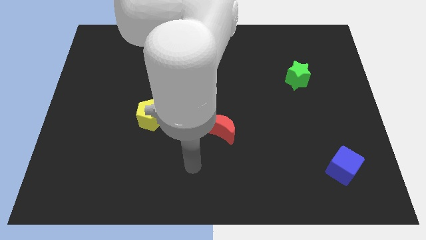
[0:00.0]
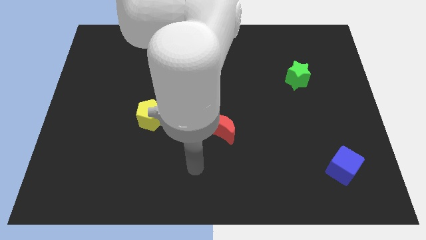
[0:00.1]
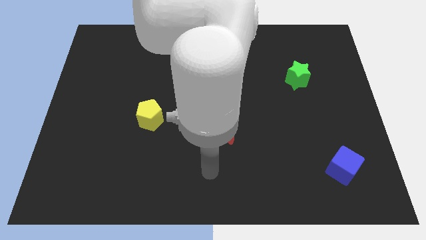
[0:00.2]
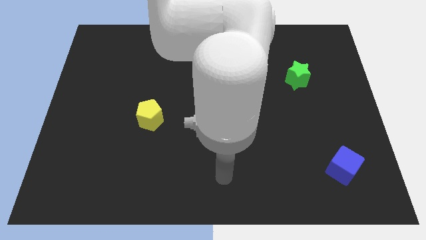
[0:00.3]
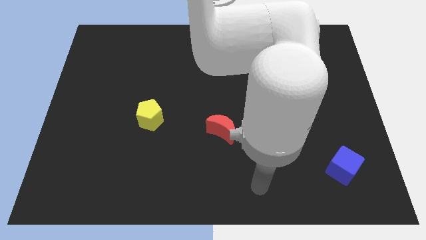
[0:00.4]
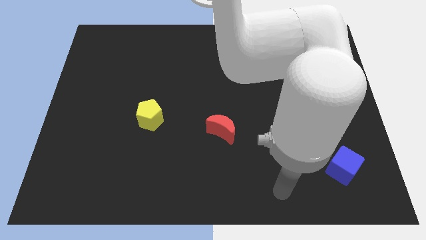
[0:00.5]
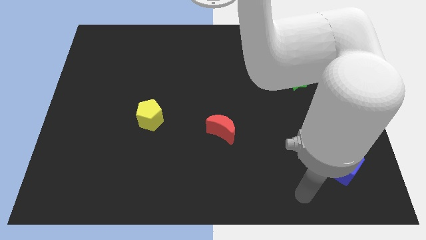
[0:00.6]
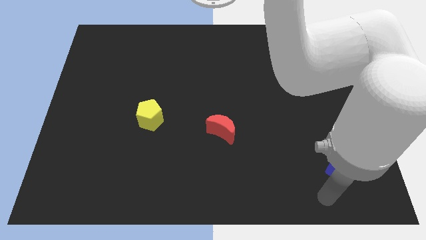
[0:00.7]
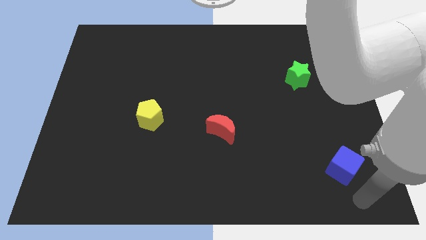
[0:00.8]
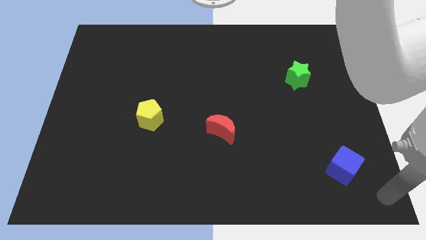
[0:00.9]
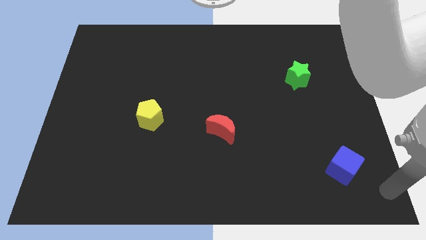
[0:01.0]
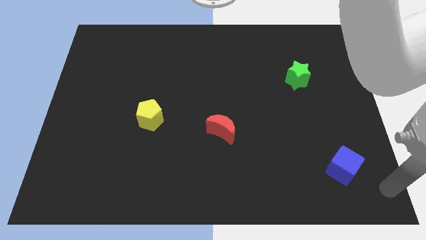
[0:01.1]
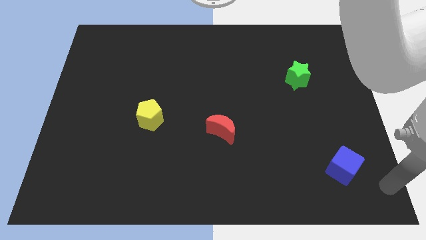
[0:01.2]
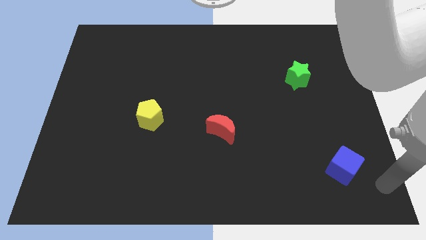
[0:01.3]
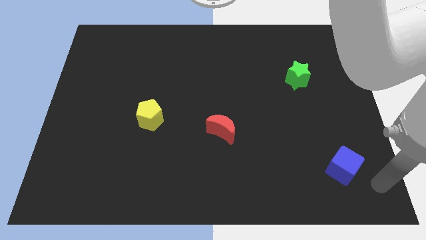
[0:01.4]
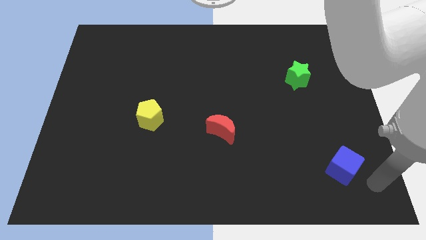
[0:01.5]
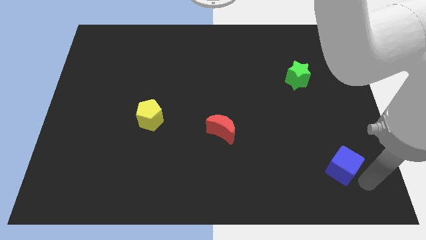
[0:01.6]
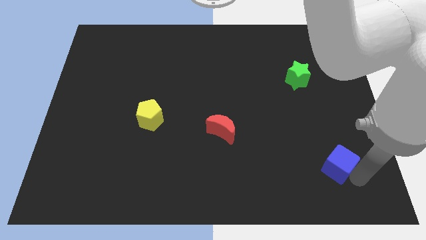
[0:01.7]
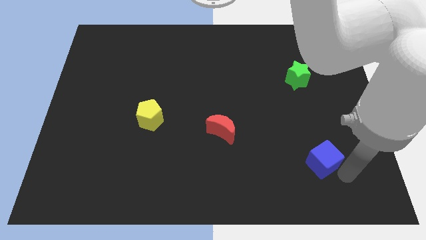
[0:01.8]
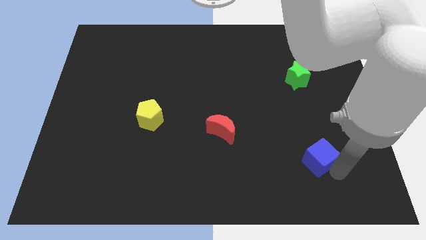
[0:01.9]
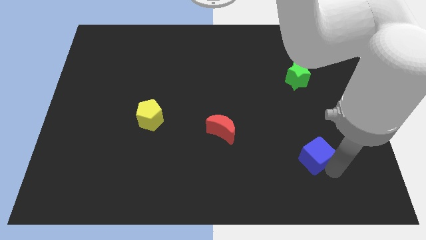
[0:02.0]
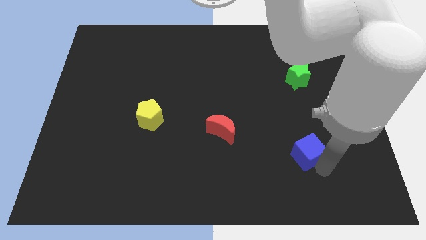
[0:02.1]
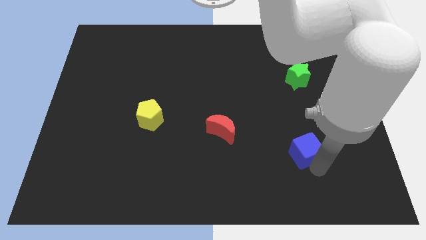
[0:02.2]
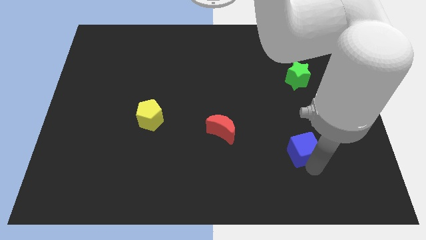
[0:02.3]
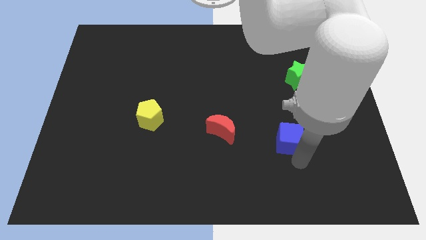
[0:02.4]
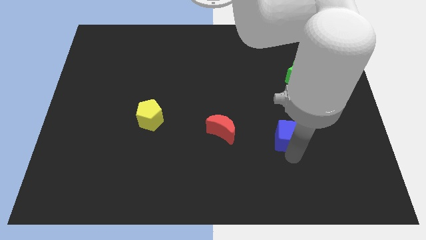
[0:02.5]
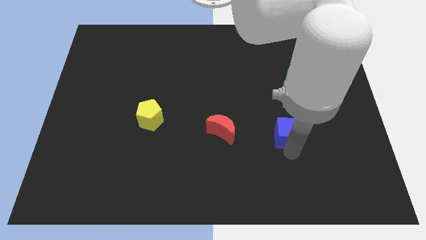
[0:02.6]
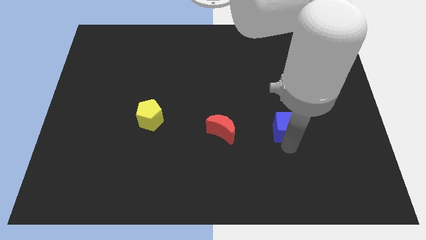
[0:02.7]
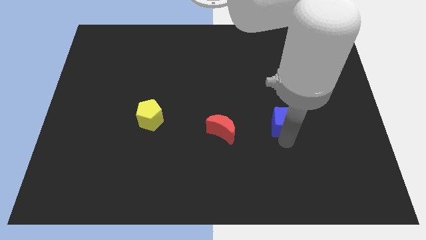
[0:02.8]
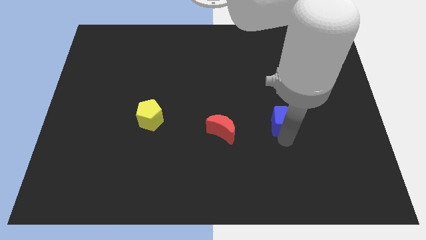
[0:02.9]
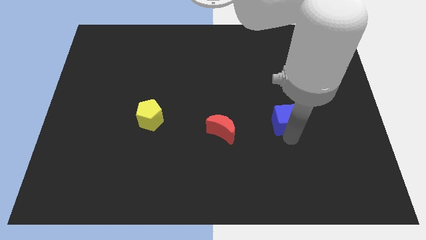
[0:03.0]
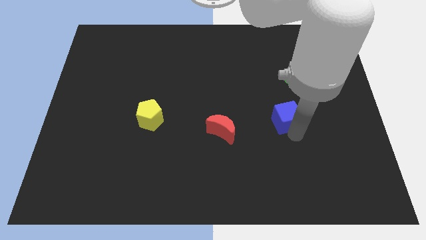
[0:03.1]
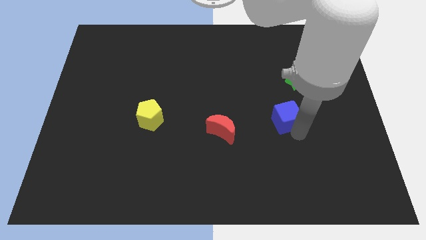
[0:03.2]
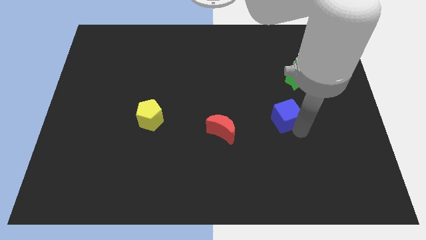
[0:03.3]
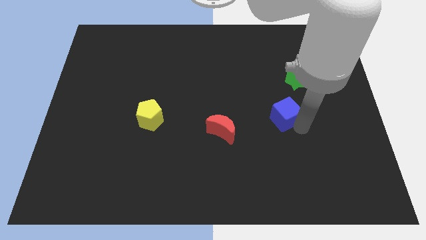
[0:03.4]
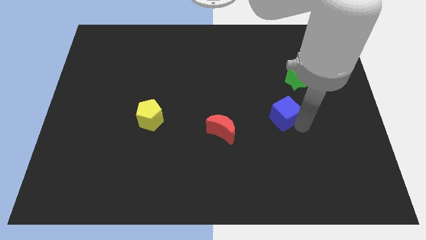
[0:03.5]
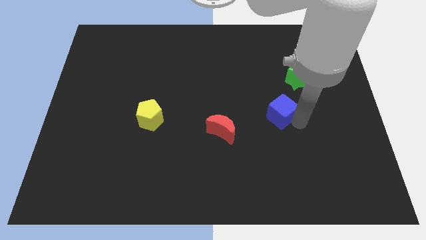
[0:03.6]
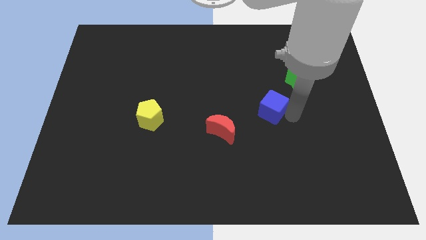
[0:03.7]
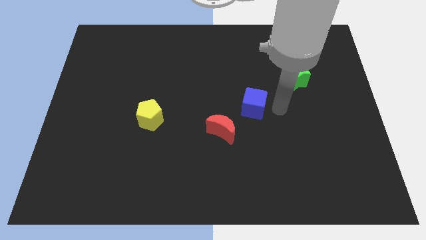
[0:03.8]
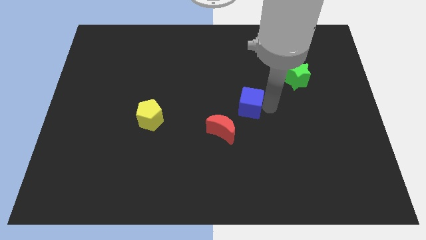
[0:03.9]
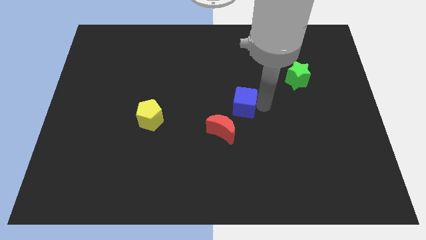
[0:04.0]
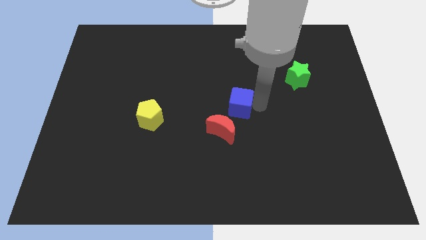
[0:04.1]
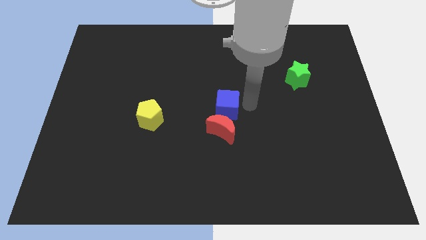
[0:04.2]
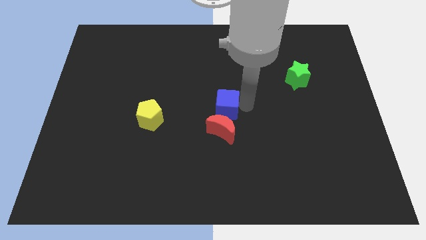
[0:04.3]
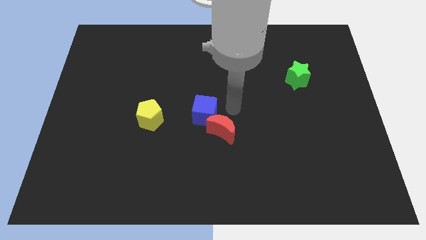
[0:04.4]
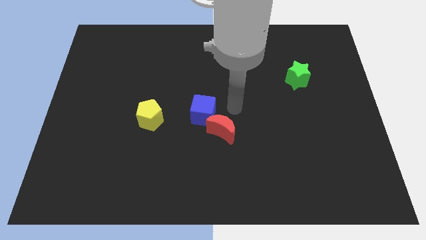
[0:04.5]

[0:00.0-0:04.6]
push the blue block towards the red moon

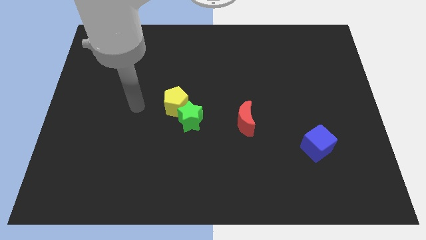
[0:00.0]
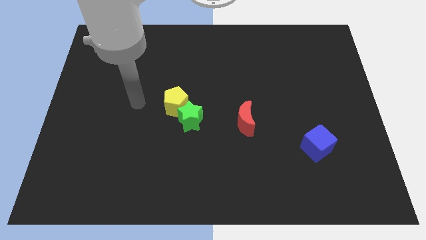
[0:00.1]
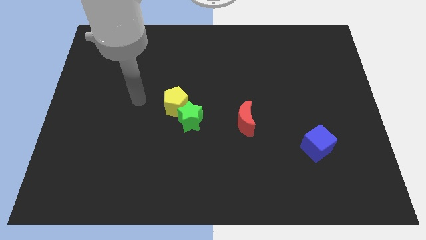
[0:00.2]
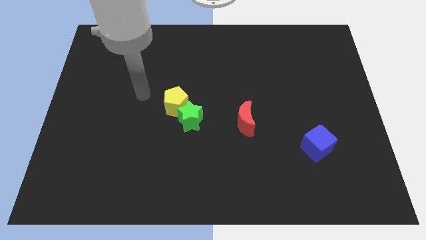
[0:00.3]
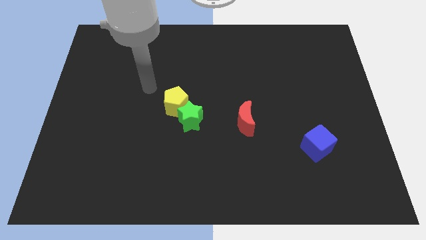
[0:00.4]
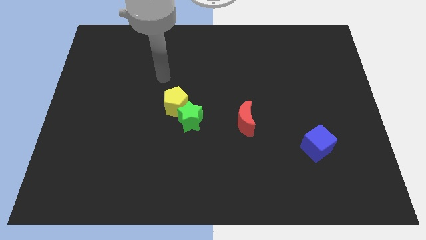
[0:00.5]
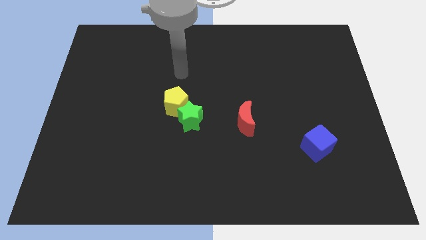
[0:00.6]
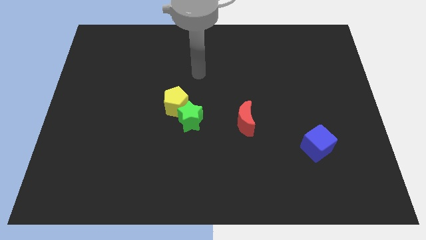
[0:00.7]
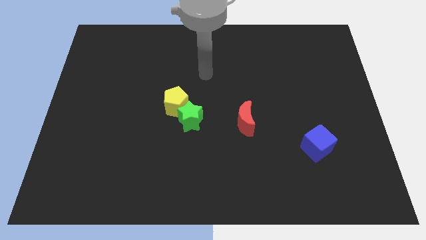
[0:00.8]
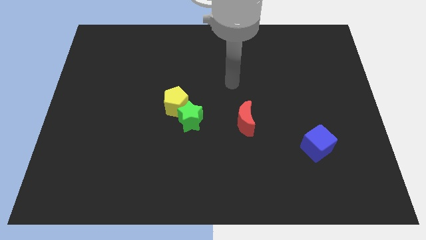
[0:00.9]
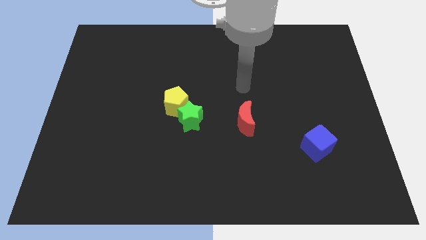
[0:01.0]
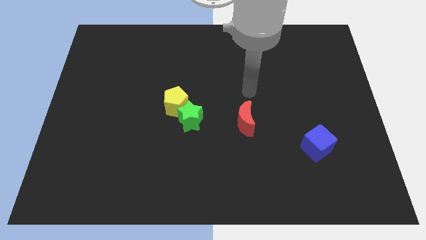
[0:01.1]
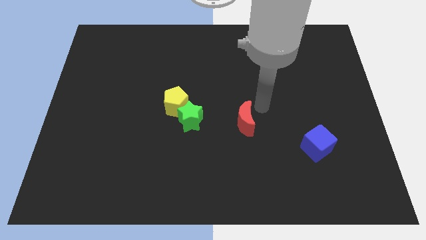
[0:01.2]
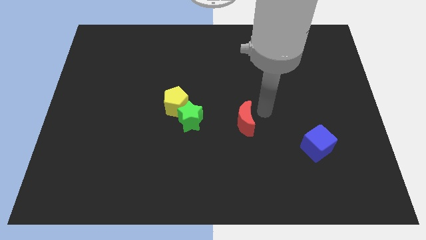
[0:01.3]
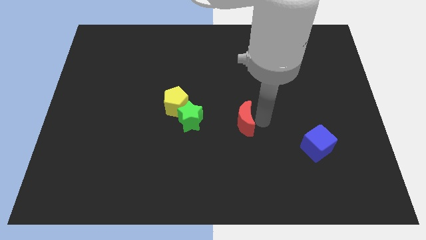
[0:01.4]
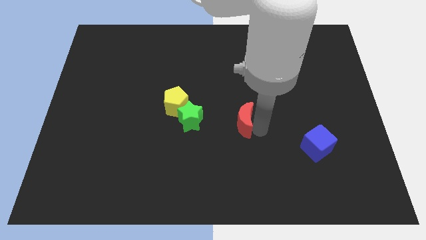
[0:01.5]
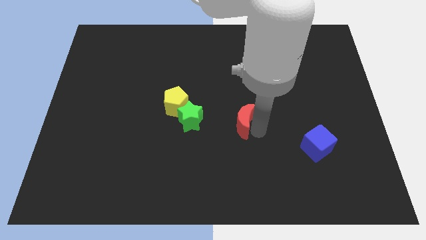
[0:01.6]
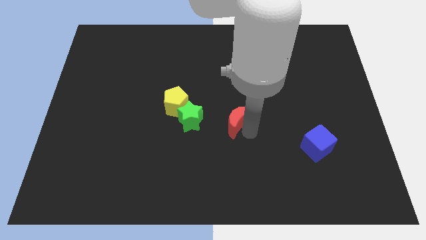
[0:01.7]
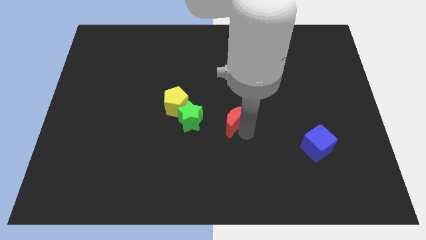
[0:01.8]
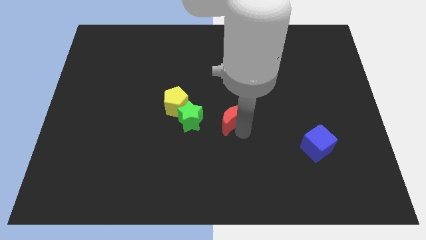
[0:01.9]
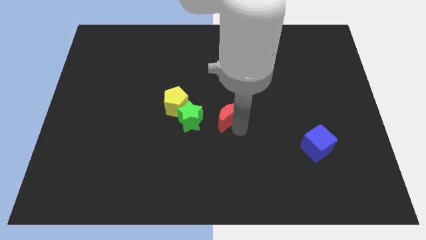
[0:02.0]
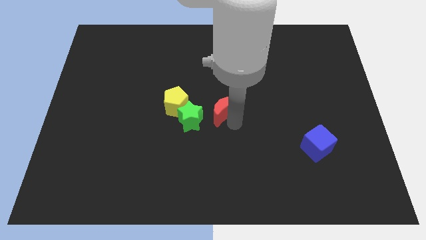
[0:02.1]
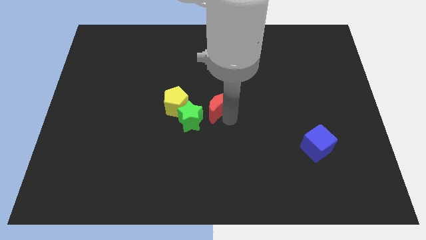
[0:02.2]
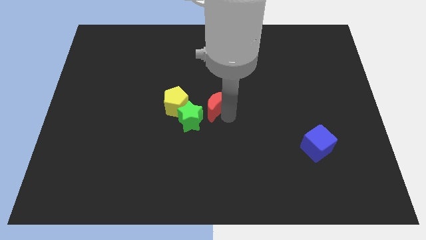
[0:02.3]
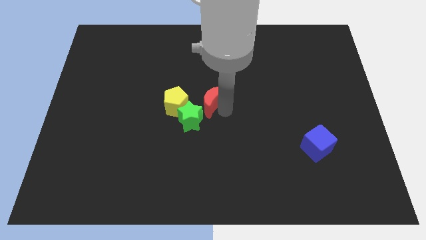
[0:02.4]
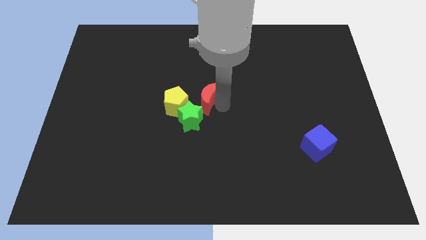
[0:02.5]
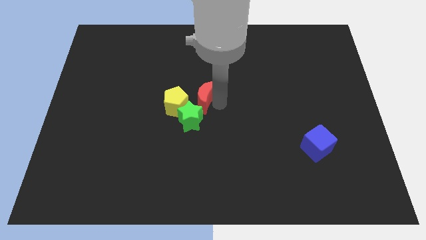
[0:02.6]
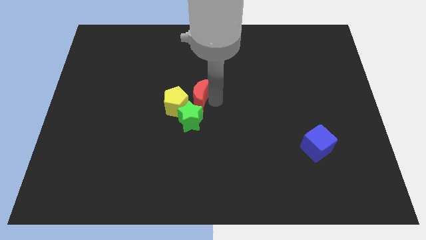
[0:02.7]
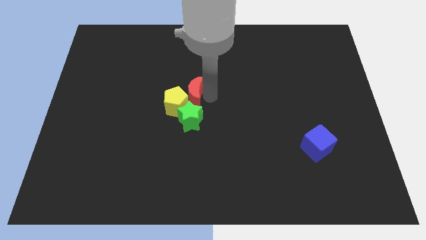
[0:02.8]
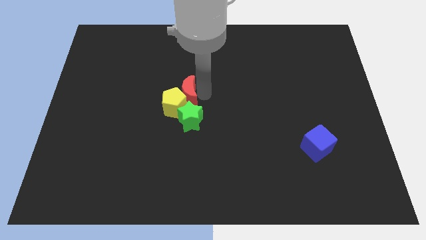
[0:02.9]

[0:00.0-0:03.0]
slide the red moon to the pentagon

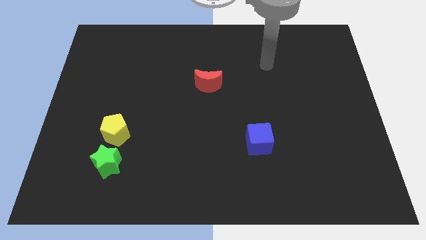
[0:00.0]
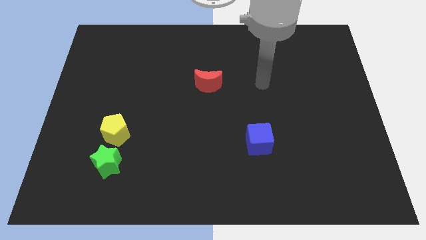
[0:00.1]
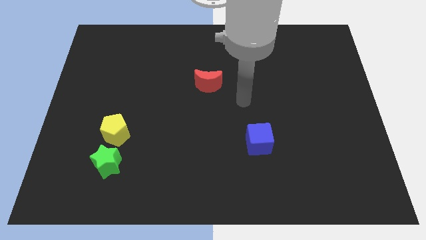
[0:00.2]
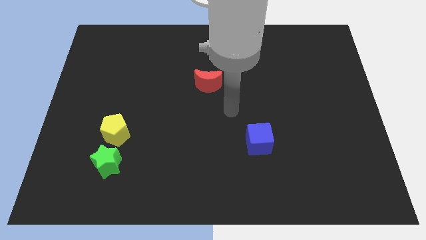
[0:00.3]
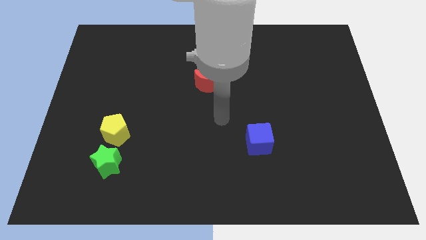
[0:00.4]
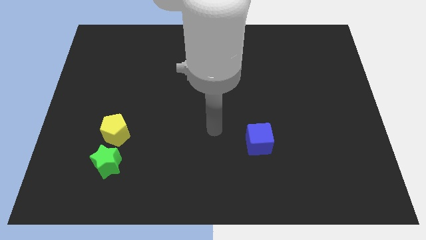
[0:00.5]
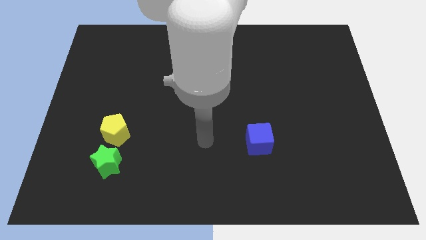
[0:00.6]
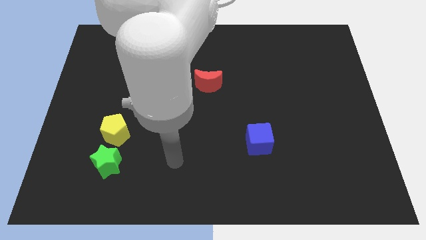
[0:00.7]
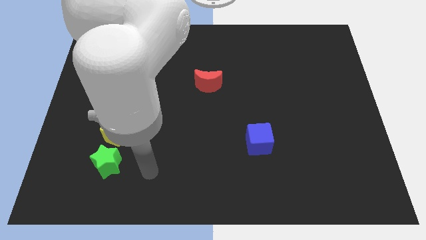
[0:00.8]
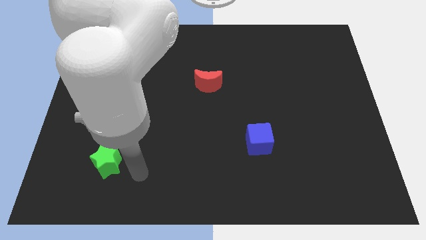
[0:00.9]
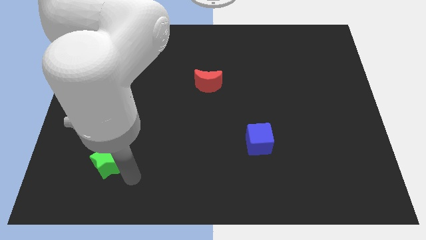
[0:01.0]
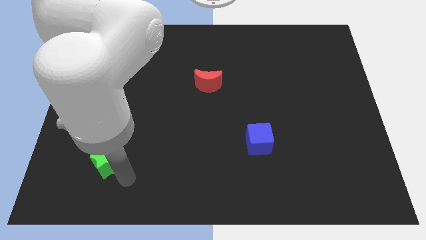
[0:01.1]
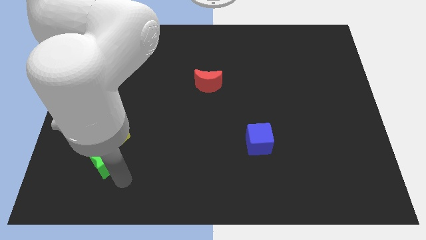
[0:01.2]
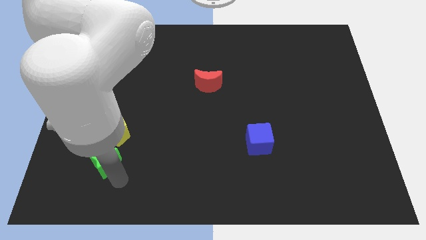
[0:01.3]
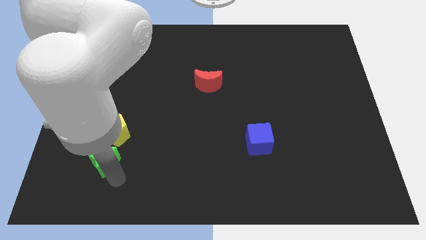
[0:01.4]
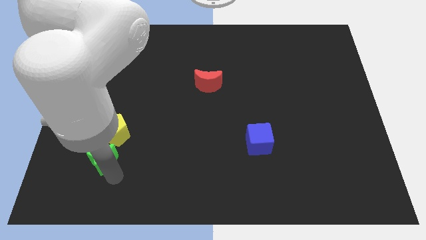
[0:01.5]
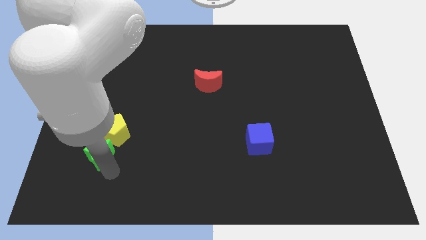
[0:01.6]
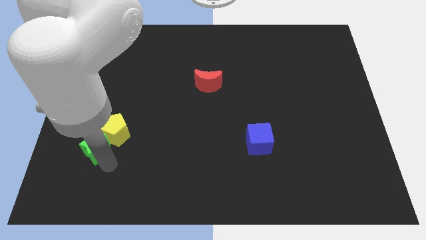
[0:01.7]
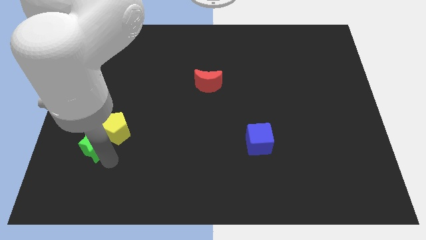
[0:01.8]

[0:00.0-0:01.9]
move the green star to the pentagon
